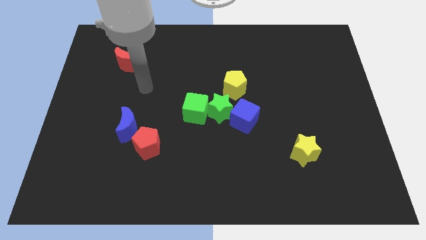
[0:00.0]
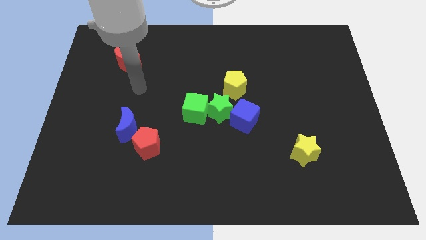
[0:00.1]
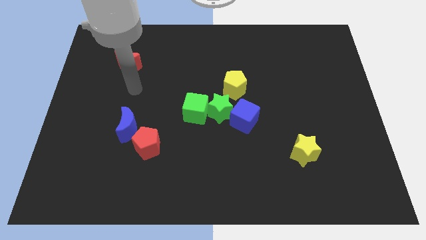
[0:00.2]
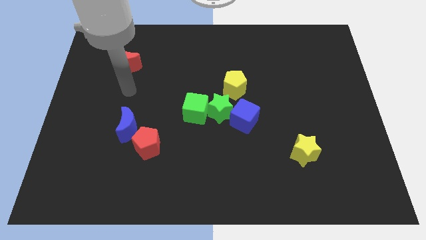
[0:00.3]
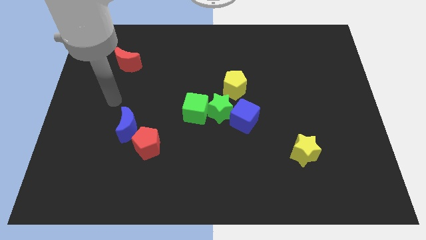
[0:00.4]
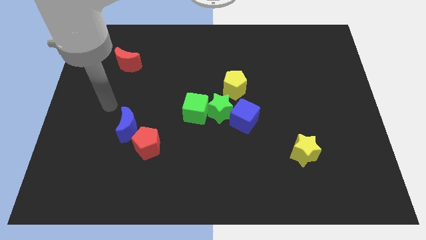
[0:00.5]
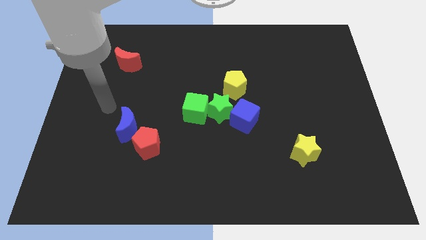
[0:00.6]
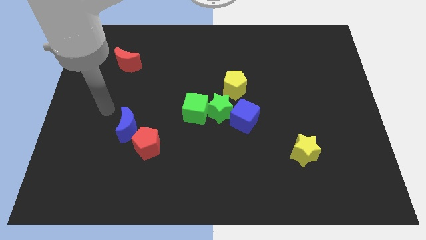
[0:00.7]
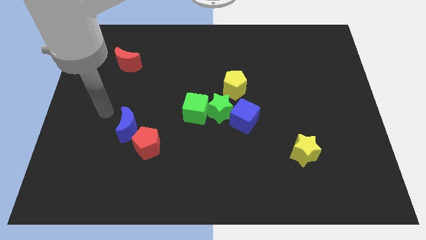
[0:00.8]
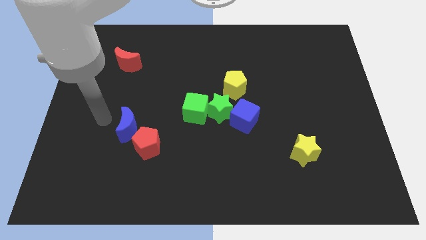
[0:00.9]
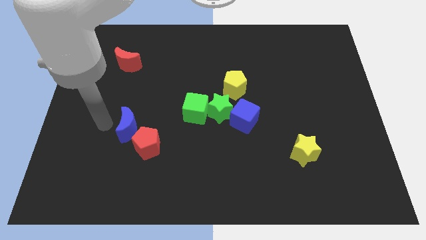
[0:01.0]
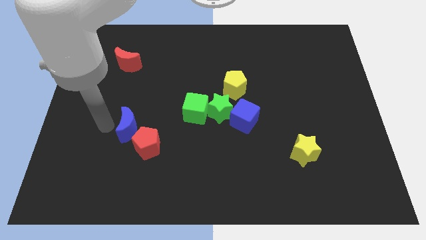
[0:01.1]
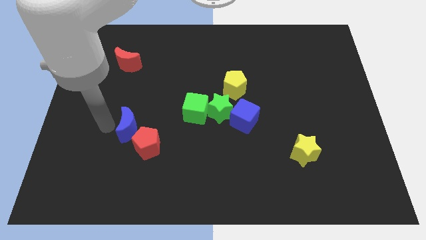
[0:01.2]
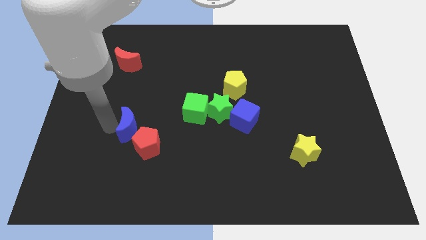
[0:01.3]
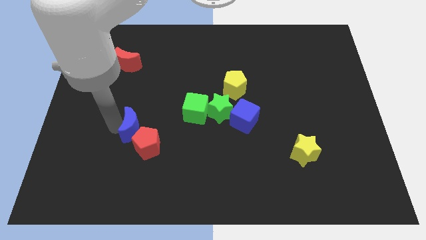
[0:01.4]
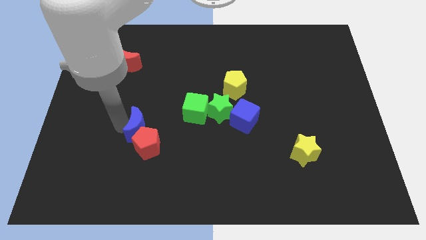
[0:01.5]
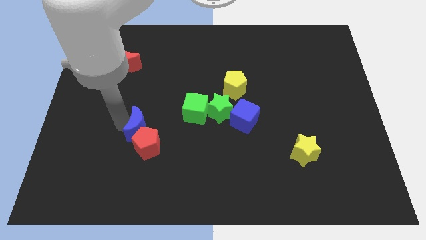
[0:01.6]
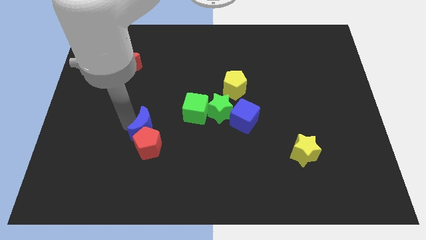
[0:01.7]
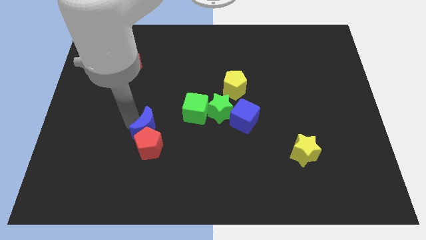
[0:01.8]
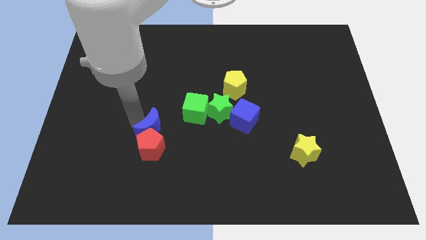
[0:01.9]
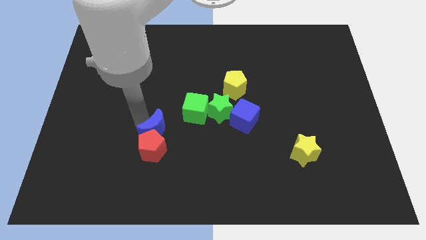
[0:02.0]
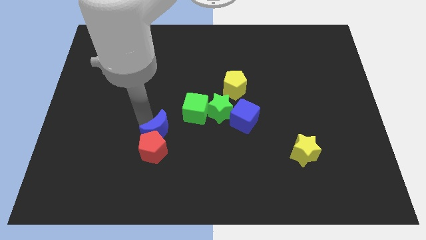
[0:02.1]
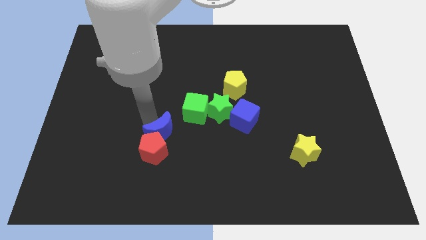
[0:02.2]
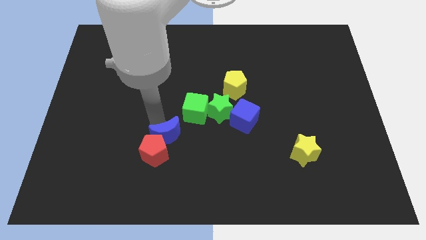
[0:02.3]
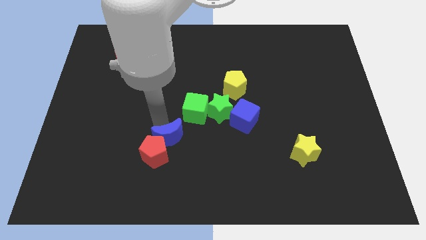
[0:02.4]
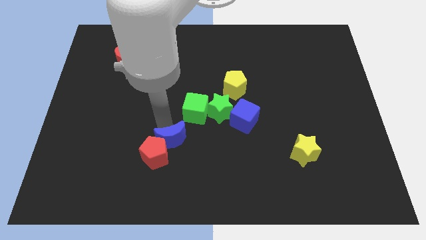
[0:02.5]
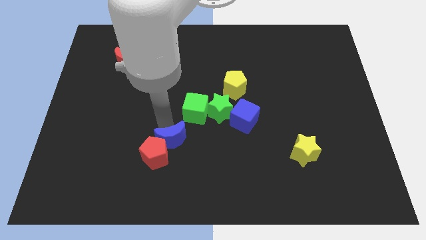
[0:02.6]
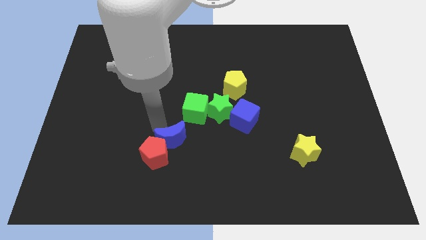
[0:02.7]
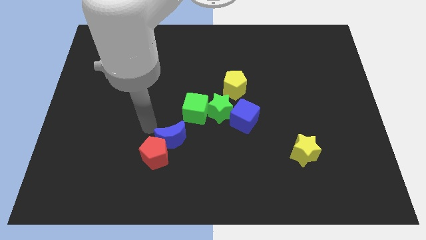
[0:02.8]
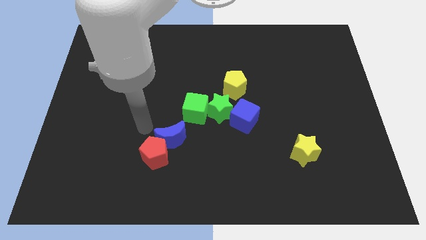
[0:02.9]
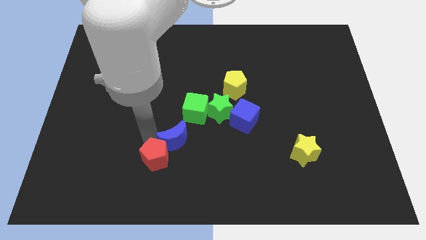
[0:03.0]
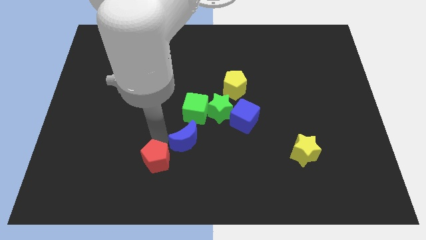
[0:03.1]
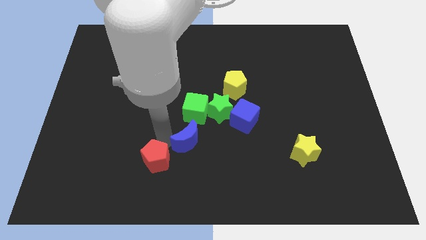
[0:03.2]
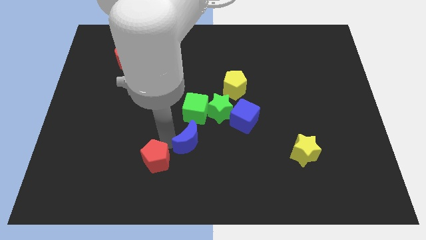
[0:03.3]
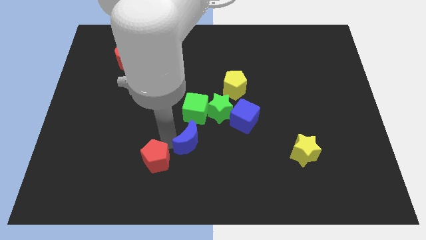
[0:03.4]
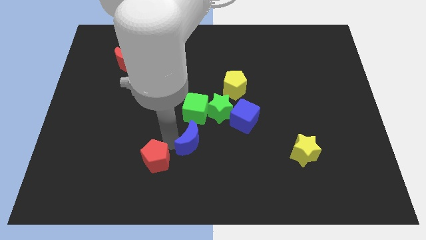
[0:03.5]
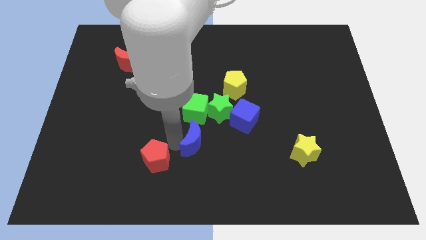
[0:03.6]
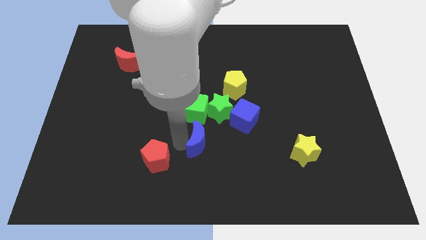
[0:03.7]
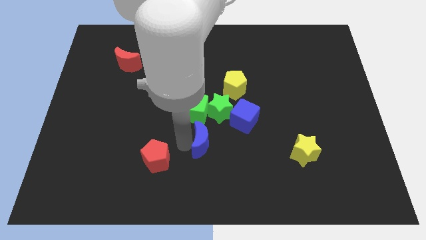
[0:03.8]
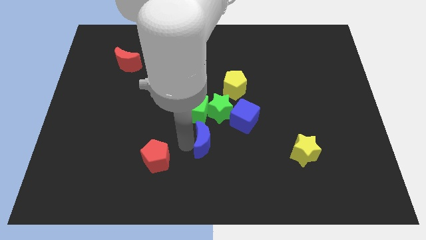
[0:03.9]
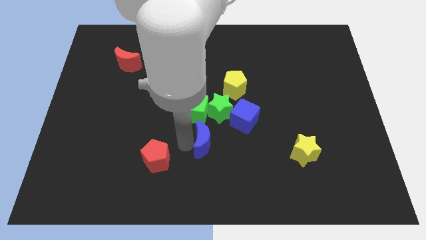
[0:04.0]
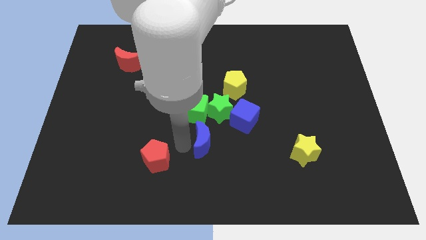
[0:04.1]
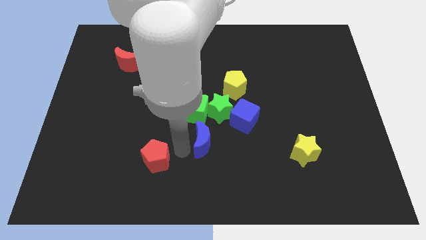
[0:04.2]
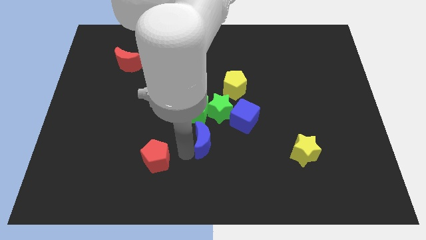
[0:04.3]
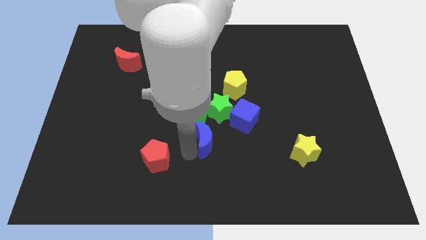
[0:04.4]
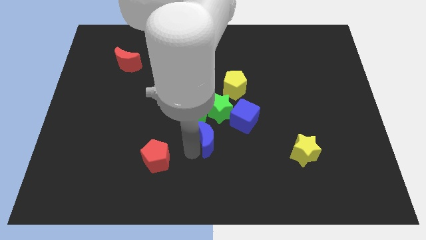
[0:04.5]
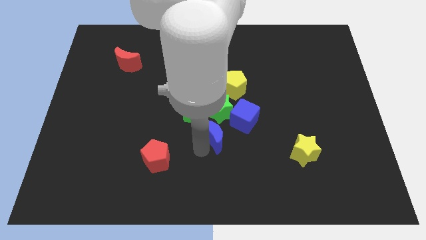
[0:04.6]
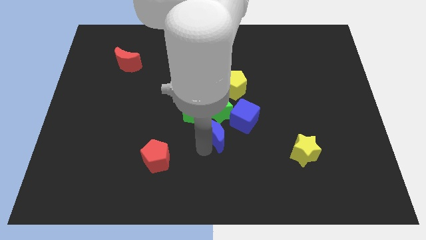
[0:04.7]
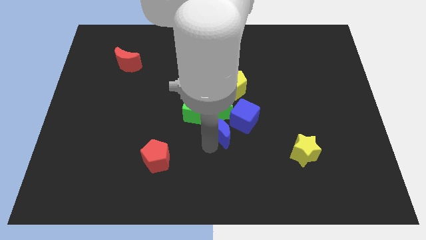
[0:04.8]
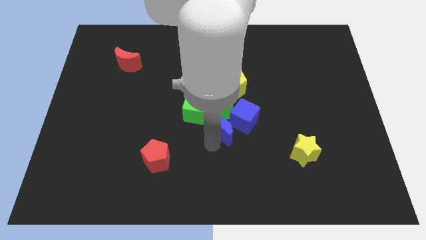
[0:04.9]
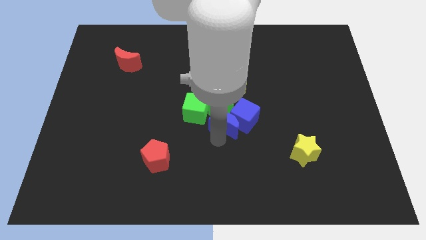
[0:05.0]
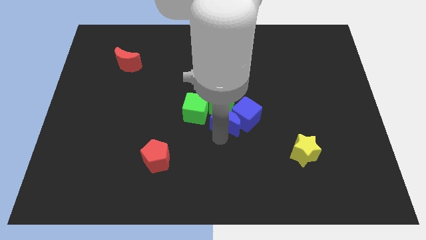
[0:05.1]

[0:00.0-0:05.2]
push the blue moon towards the green star

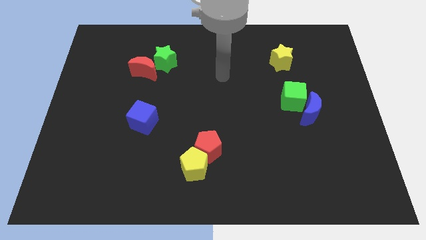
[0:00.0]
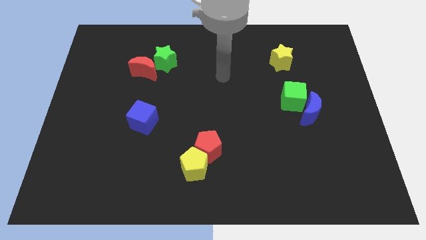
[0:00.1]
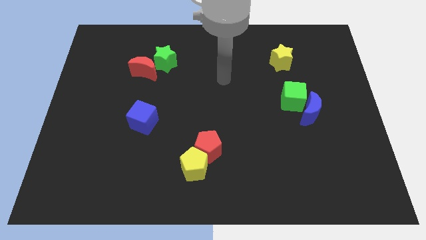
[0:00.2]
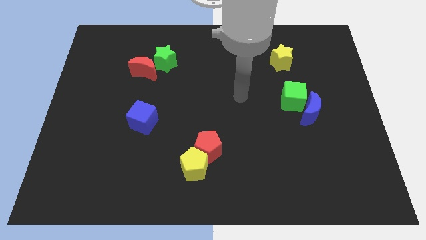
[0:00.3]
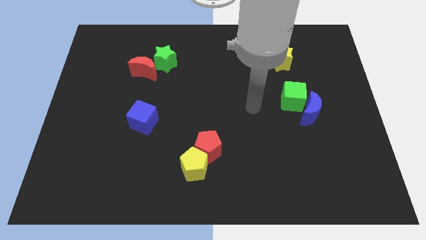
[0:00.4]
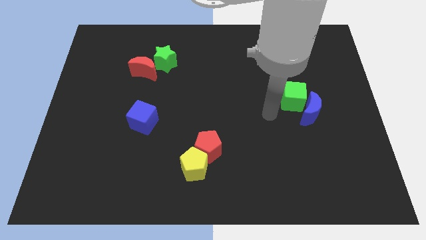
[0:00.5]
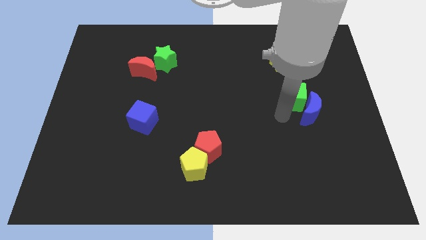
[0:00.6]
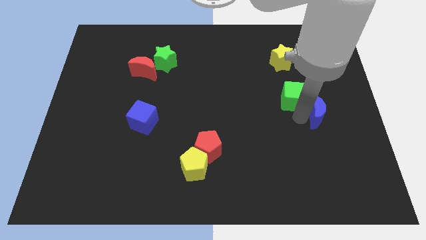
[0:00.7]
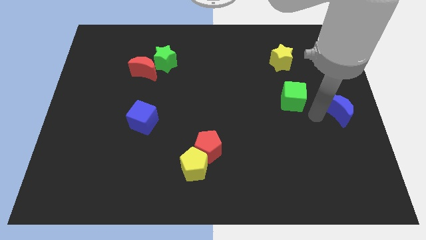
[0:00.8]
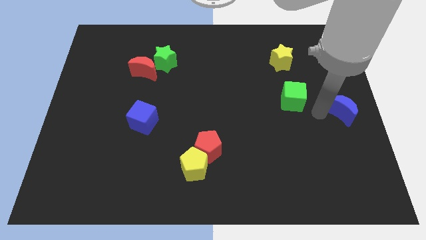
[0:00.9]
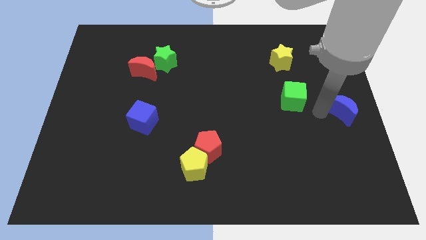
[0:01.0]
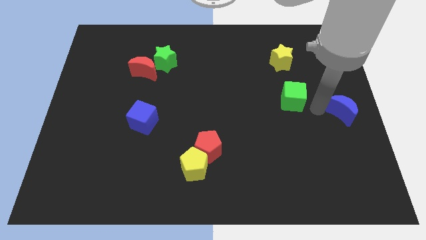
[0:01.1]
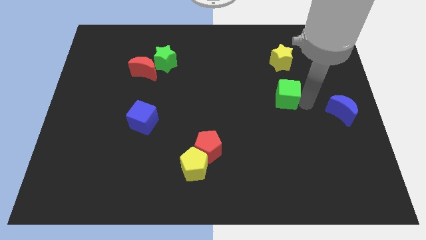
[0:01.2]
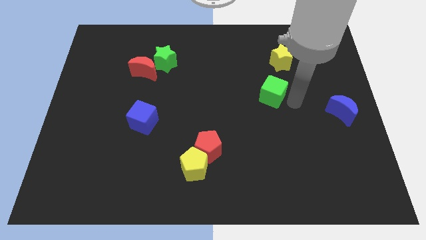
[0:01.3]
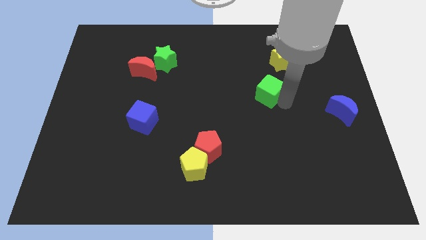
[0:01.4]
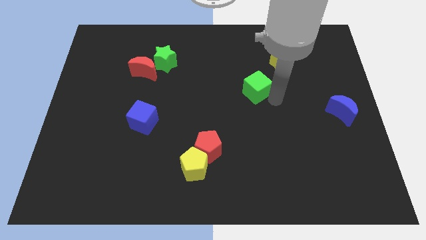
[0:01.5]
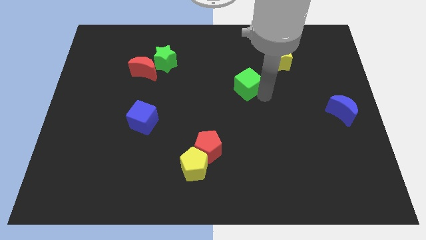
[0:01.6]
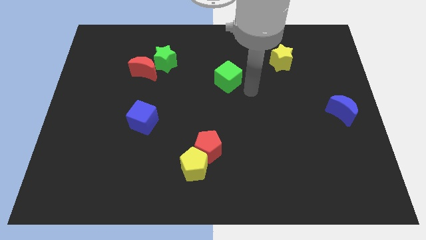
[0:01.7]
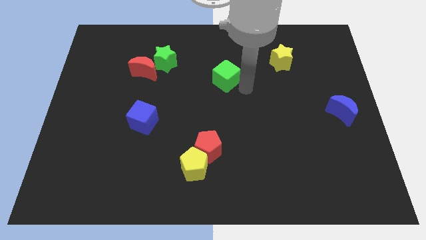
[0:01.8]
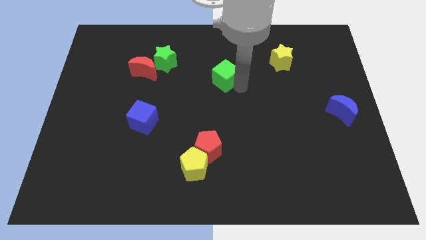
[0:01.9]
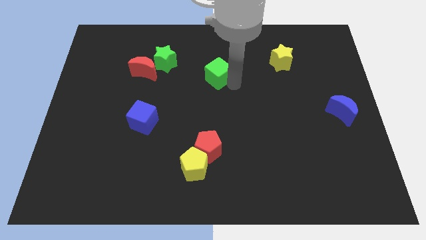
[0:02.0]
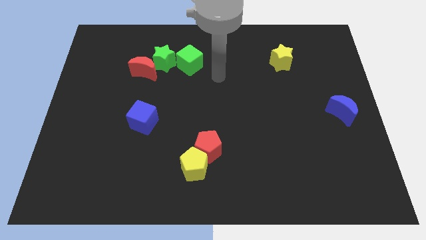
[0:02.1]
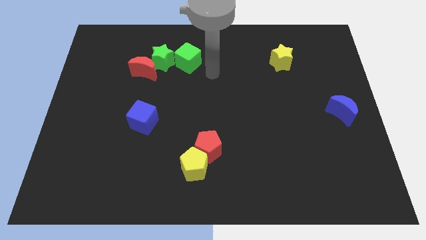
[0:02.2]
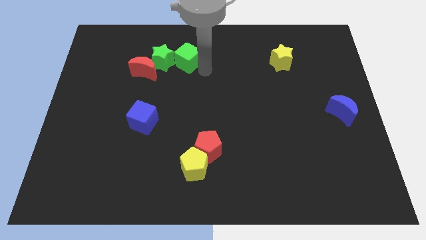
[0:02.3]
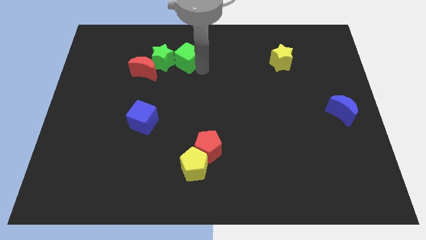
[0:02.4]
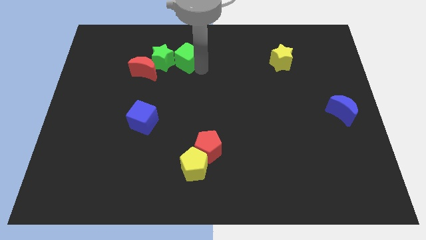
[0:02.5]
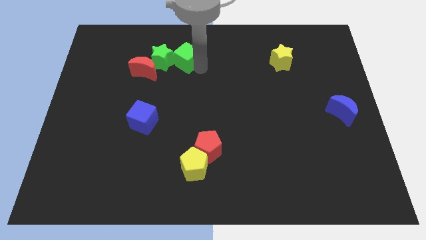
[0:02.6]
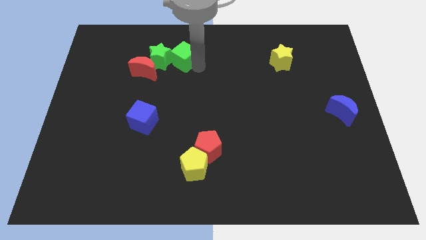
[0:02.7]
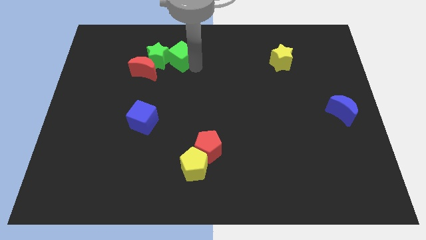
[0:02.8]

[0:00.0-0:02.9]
slide the green cube close to the green star
